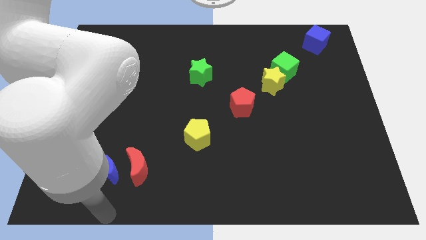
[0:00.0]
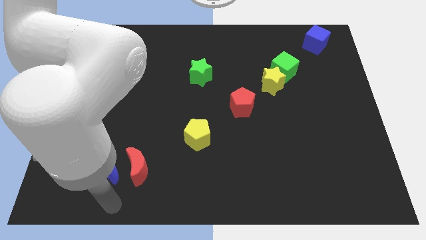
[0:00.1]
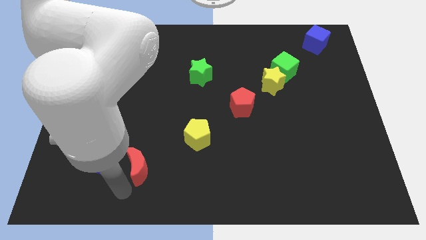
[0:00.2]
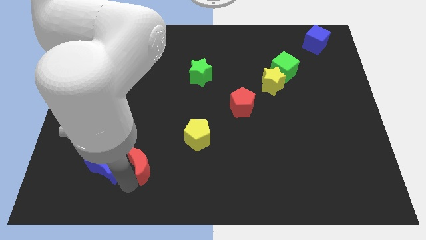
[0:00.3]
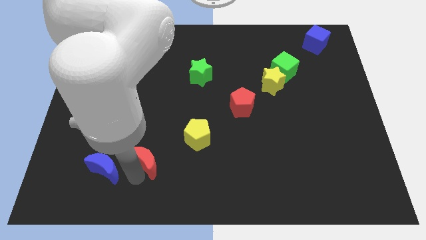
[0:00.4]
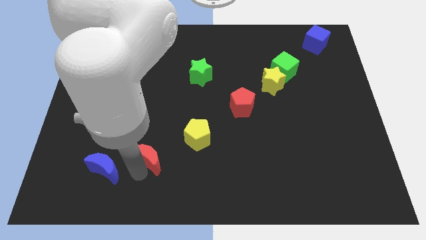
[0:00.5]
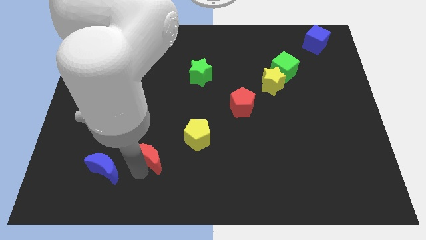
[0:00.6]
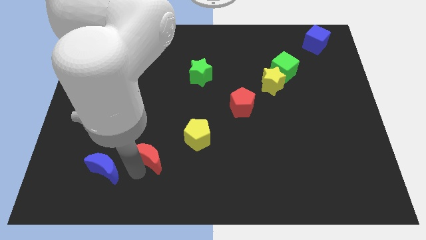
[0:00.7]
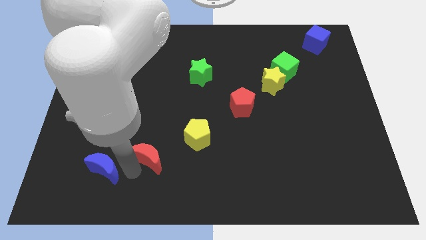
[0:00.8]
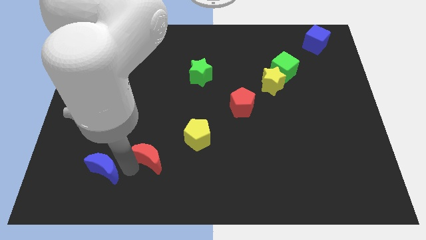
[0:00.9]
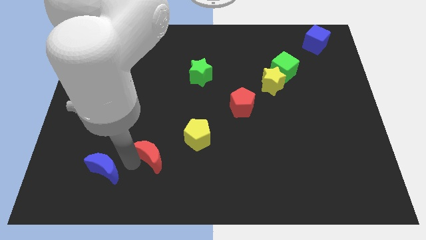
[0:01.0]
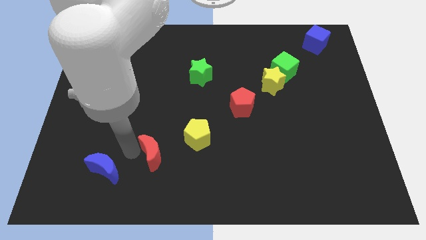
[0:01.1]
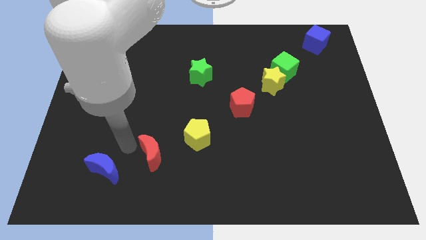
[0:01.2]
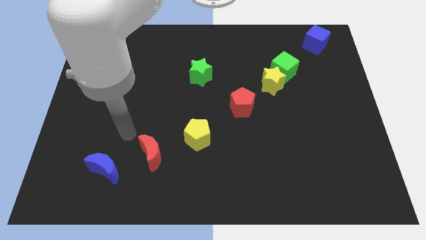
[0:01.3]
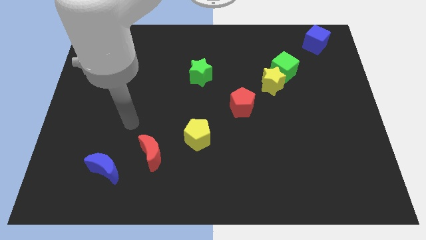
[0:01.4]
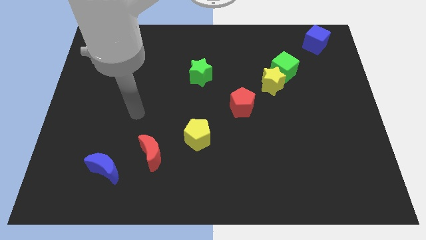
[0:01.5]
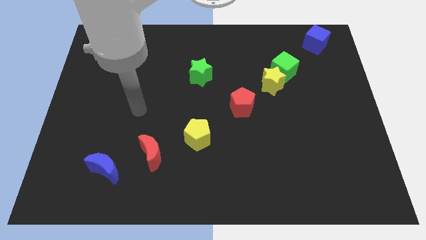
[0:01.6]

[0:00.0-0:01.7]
slightly move the red moon towards up

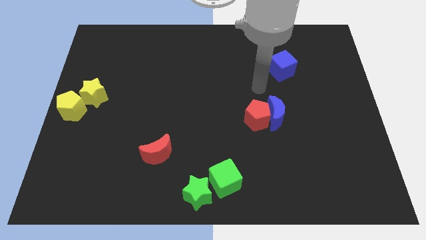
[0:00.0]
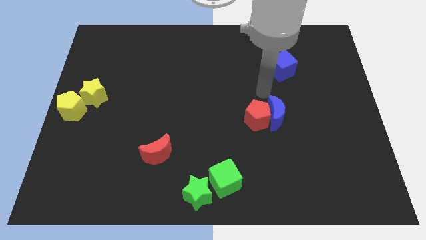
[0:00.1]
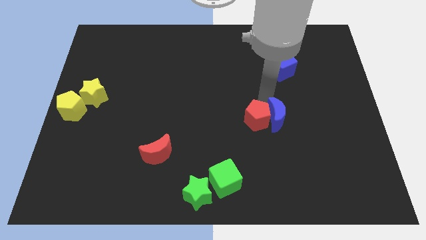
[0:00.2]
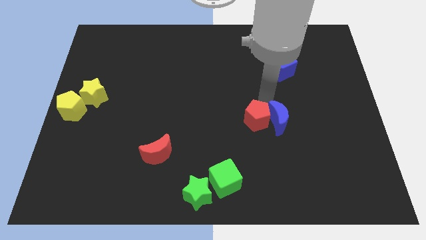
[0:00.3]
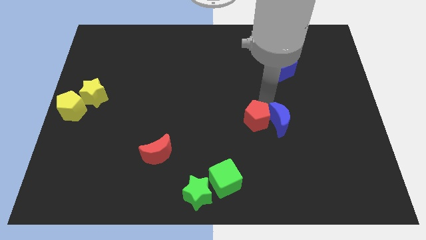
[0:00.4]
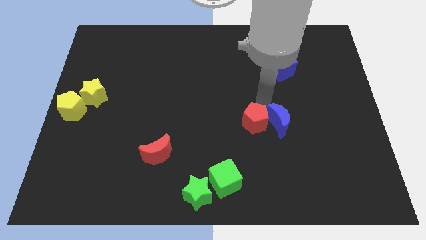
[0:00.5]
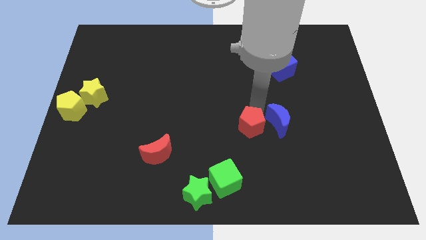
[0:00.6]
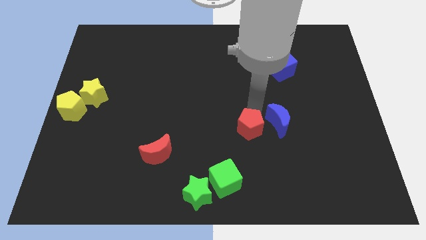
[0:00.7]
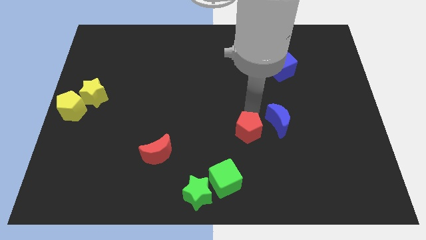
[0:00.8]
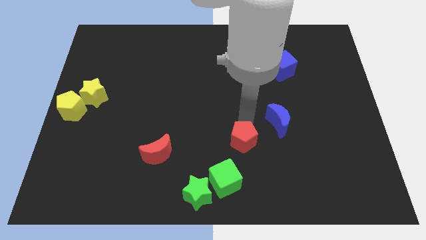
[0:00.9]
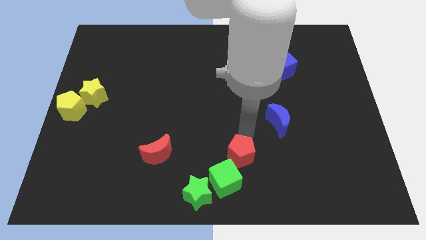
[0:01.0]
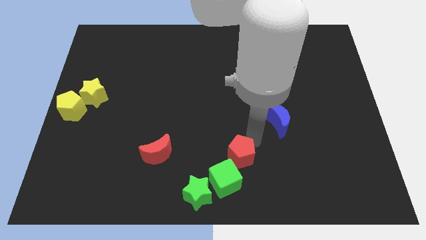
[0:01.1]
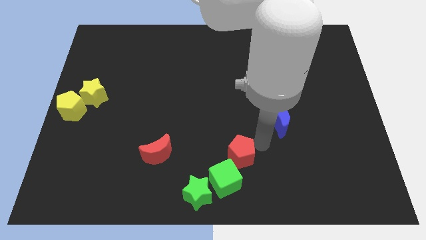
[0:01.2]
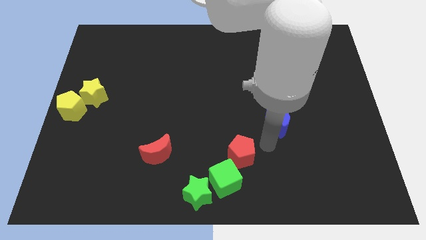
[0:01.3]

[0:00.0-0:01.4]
separate blue moon and the red pentagon

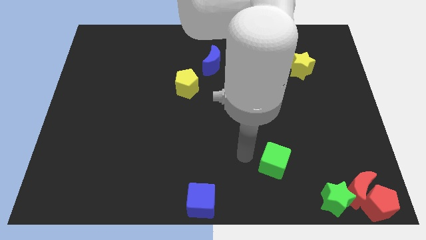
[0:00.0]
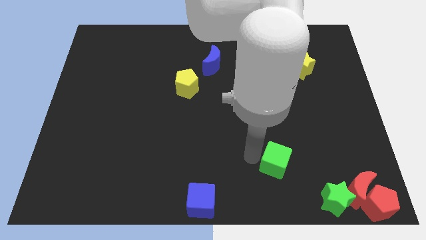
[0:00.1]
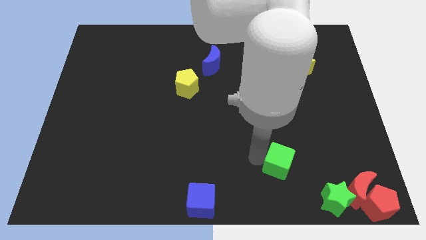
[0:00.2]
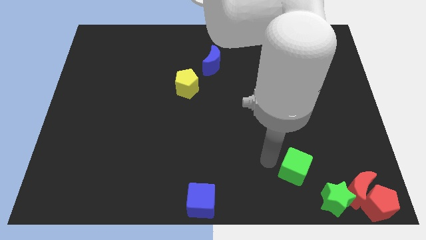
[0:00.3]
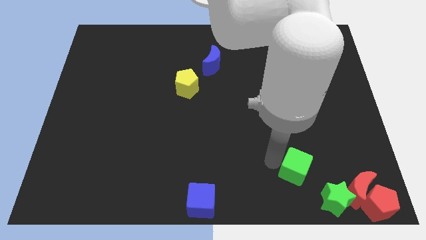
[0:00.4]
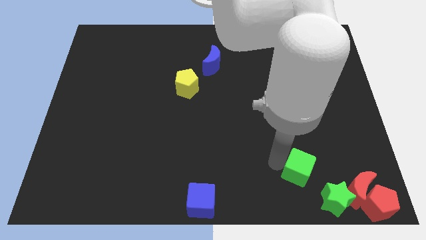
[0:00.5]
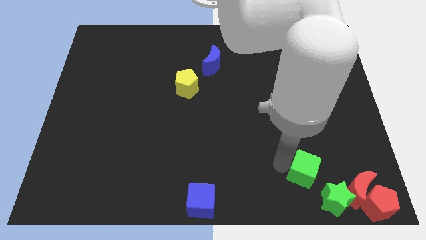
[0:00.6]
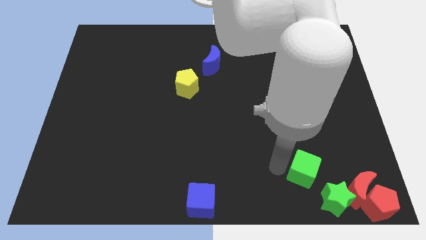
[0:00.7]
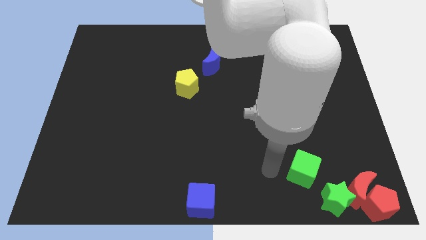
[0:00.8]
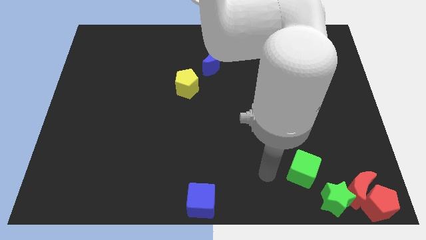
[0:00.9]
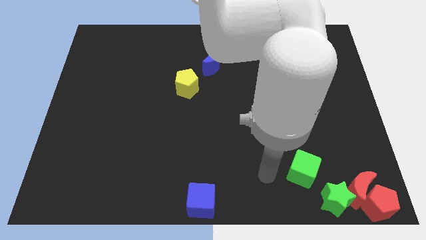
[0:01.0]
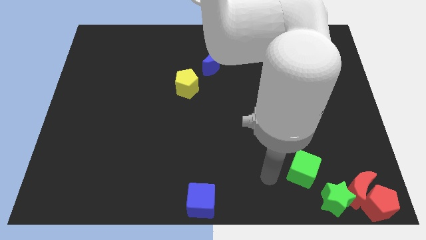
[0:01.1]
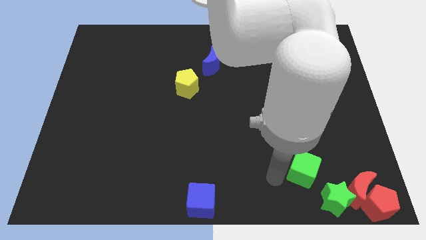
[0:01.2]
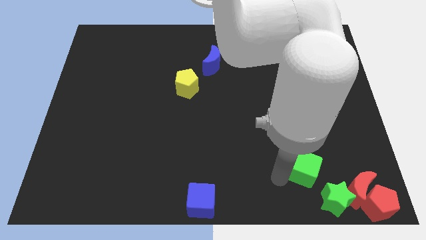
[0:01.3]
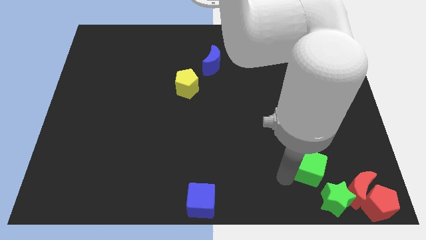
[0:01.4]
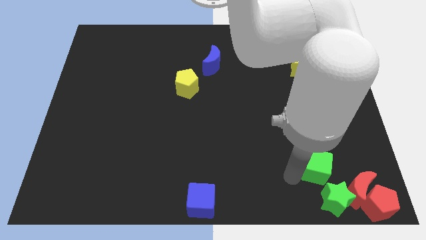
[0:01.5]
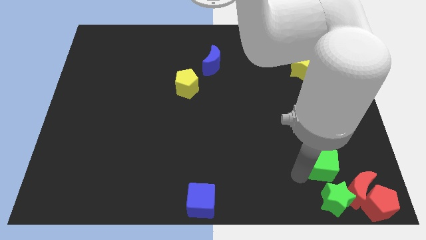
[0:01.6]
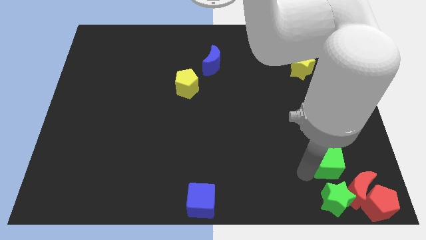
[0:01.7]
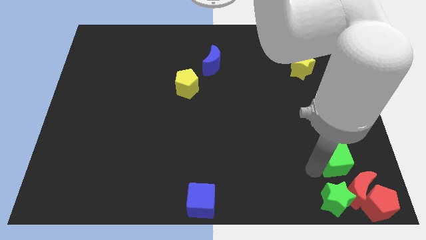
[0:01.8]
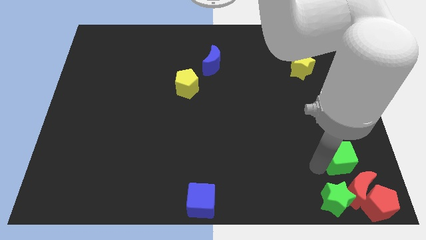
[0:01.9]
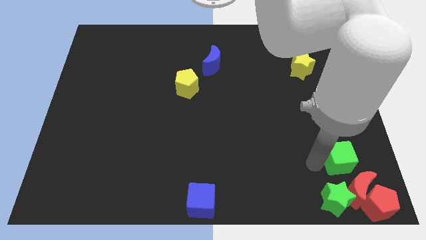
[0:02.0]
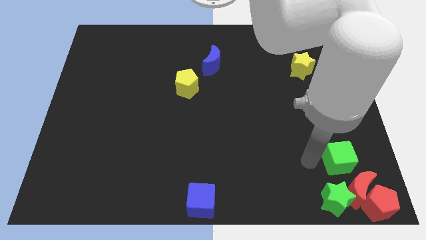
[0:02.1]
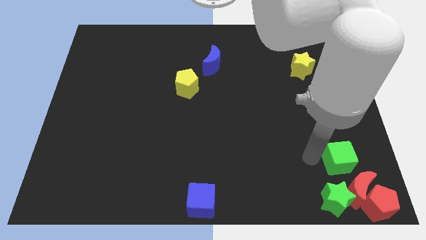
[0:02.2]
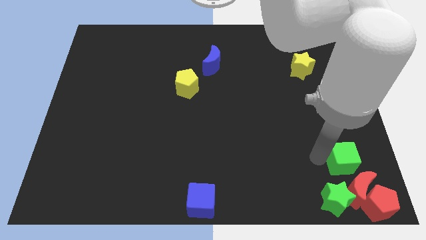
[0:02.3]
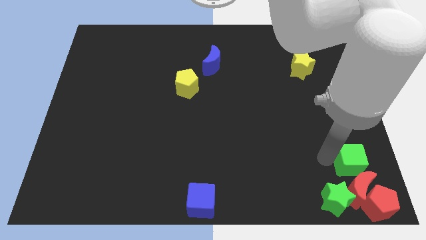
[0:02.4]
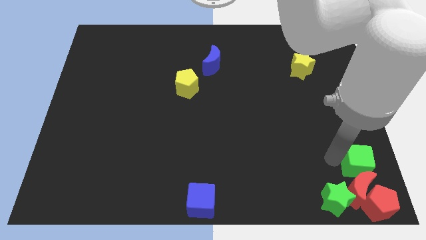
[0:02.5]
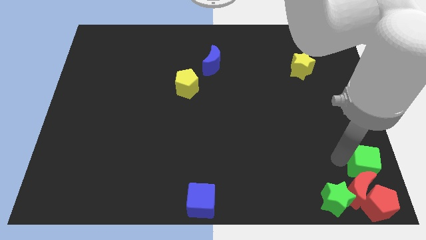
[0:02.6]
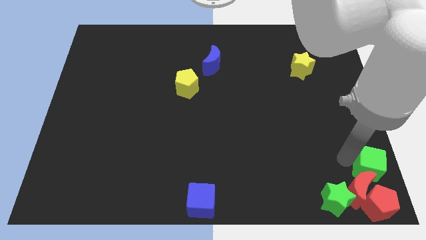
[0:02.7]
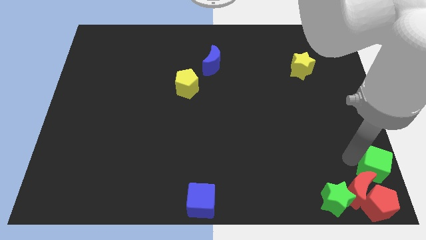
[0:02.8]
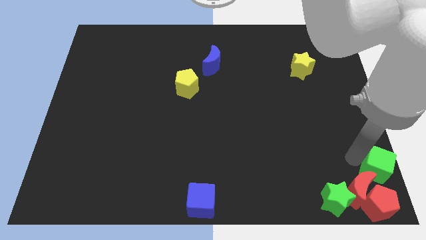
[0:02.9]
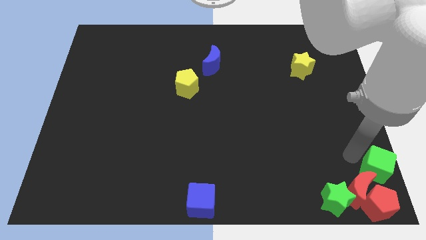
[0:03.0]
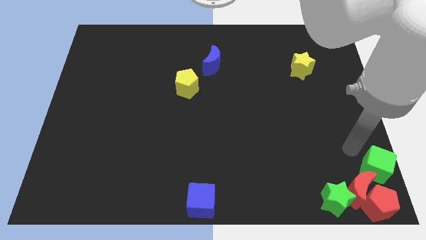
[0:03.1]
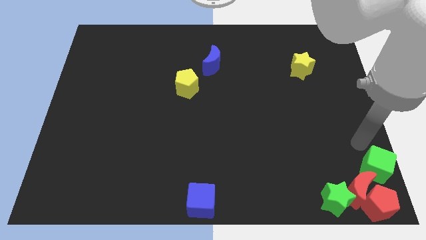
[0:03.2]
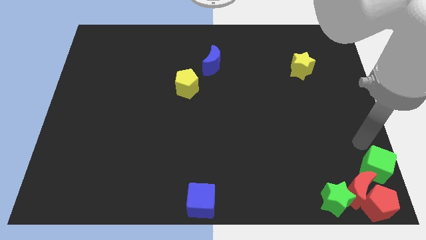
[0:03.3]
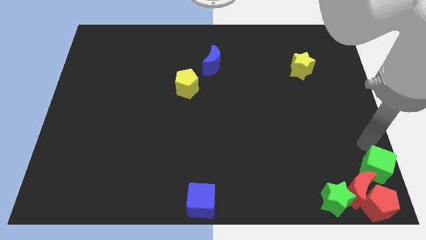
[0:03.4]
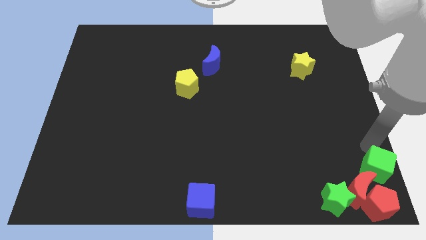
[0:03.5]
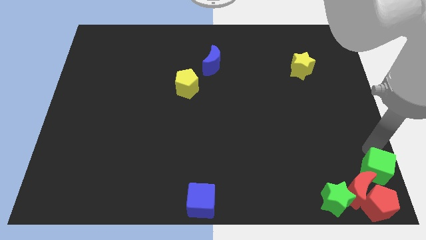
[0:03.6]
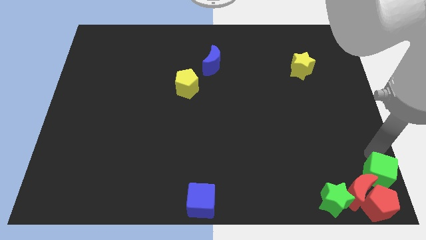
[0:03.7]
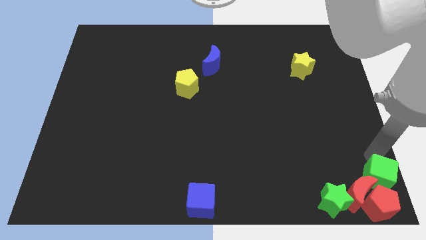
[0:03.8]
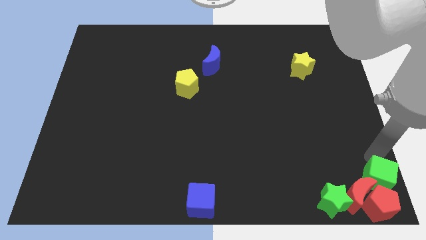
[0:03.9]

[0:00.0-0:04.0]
push the green cube into the group of blocks at the bottom right corner of the board

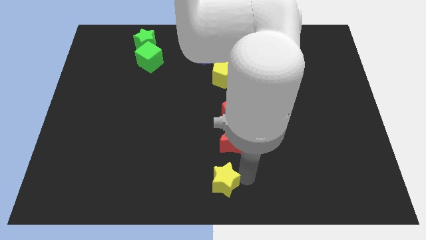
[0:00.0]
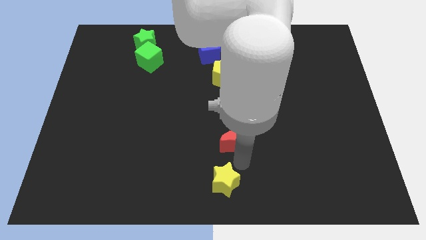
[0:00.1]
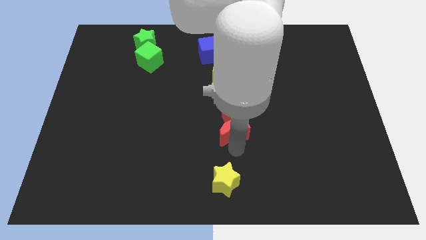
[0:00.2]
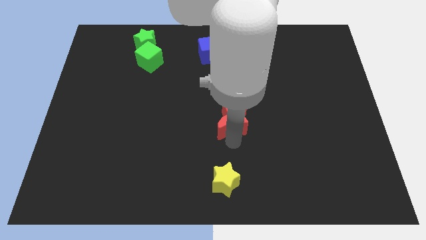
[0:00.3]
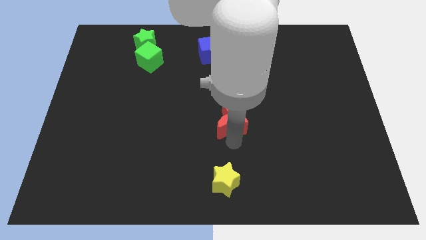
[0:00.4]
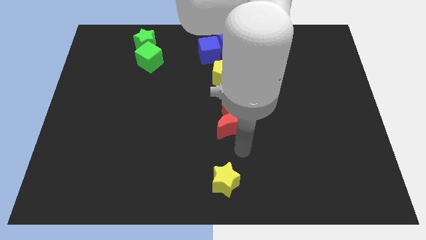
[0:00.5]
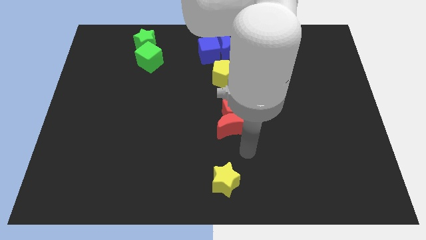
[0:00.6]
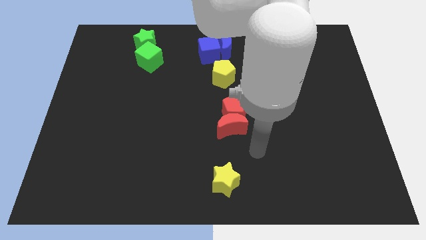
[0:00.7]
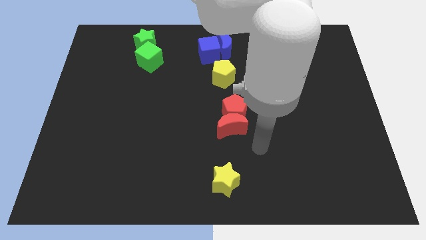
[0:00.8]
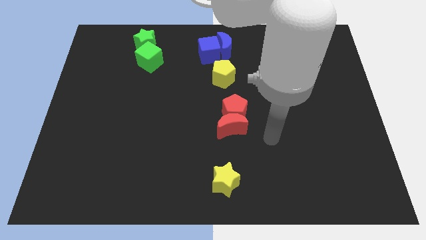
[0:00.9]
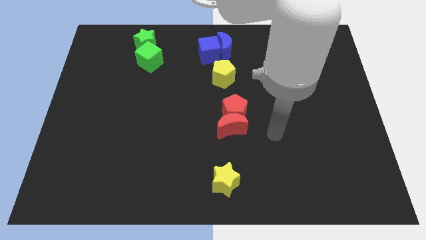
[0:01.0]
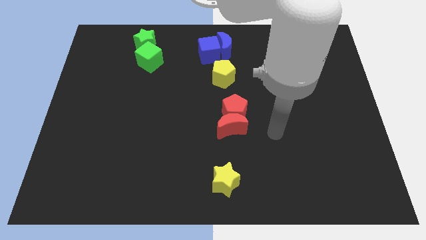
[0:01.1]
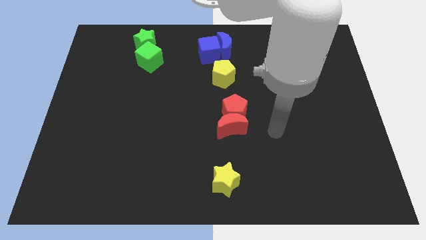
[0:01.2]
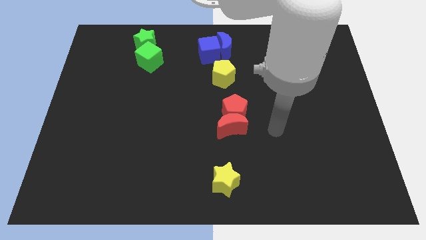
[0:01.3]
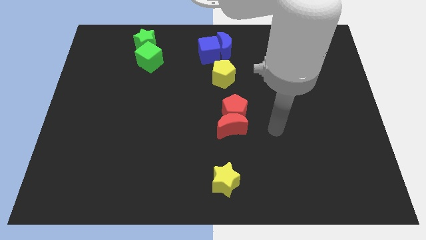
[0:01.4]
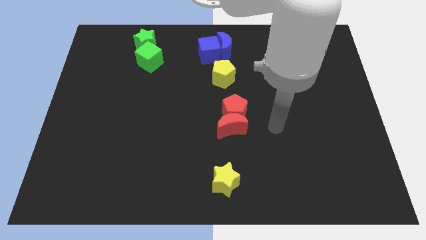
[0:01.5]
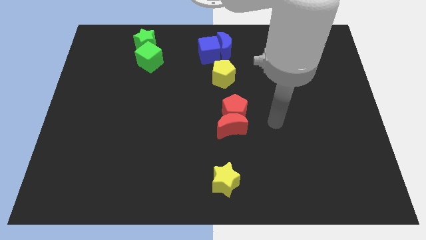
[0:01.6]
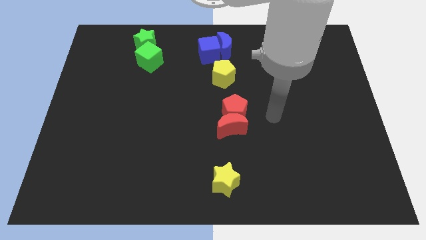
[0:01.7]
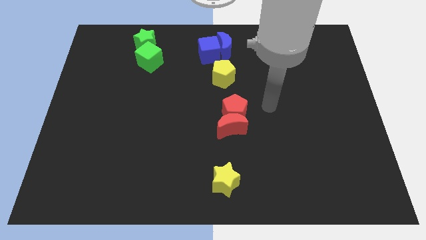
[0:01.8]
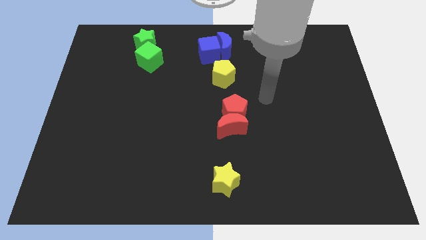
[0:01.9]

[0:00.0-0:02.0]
push the red moon into the red pentagon
